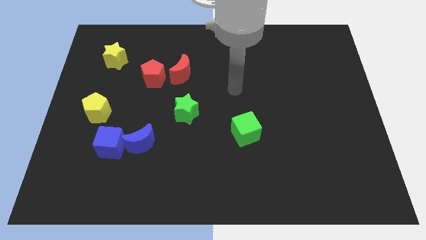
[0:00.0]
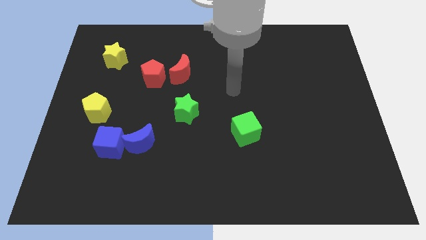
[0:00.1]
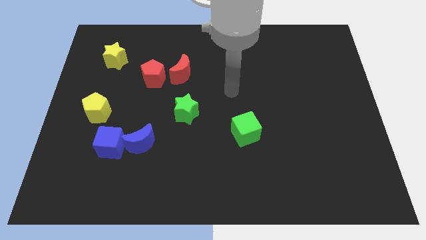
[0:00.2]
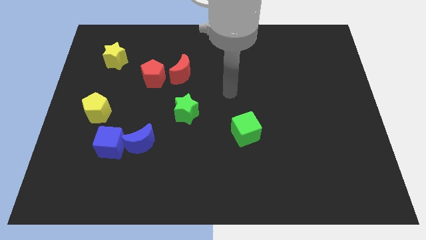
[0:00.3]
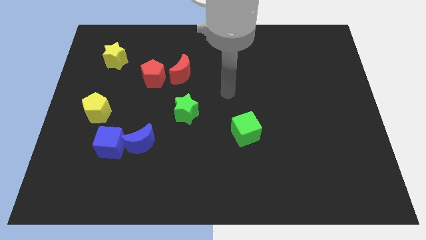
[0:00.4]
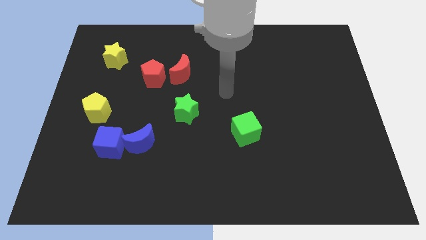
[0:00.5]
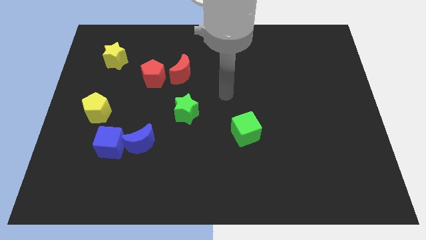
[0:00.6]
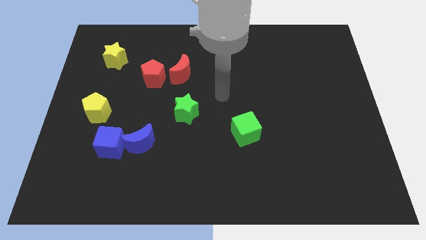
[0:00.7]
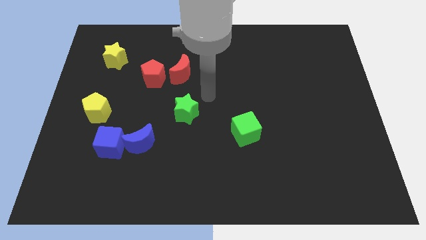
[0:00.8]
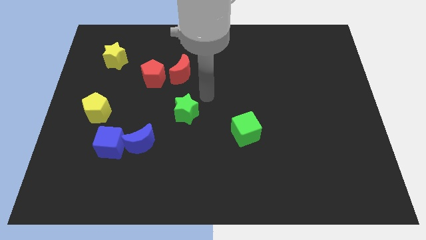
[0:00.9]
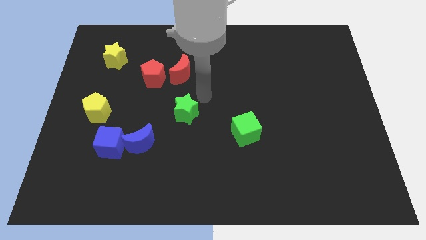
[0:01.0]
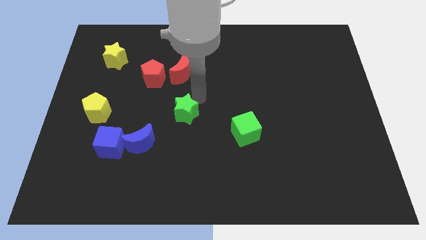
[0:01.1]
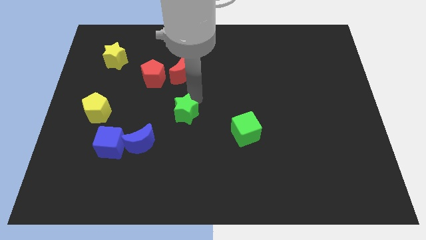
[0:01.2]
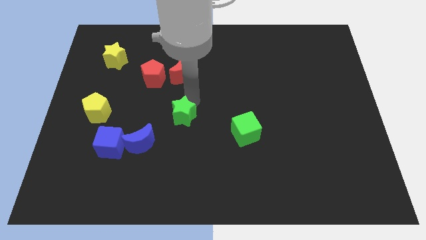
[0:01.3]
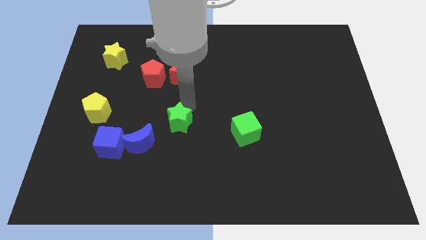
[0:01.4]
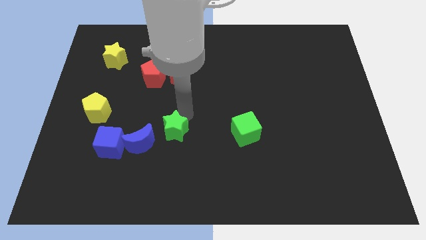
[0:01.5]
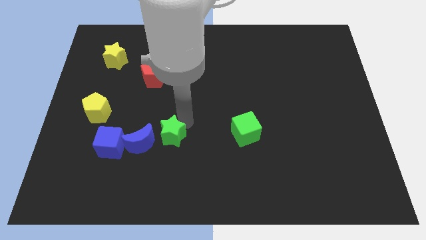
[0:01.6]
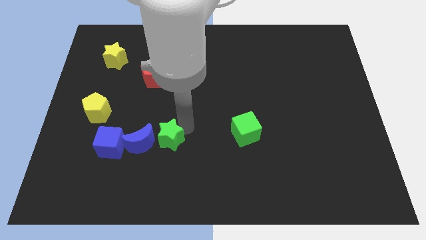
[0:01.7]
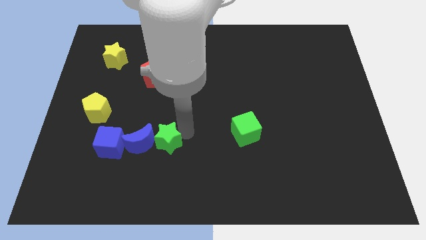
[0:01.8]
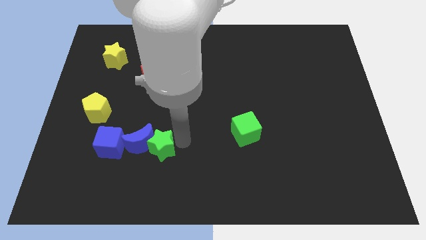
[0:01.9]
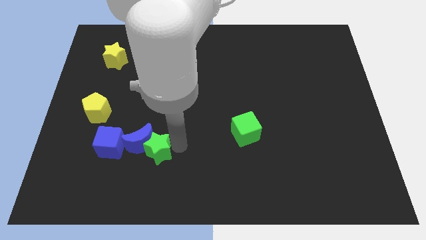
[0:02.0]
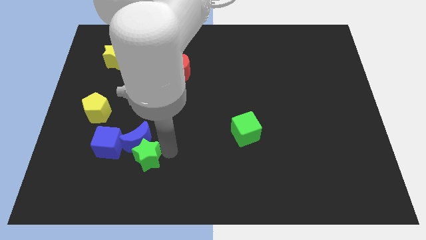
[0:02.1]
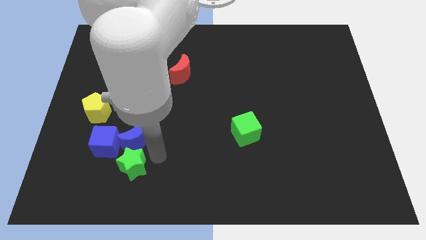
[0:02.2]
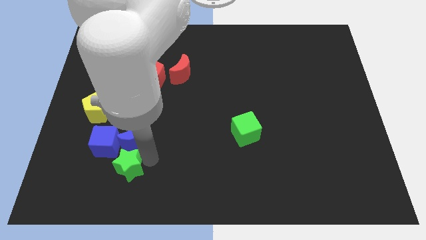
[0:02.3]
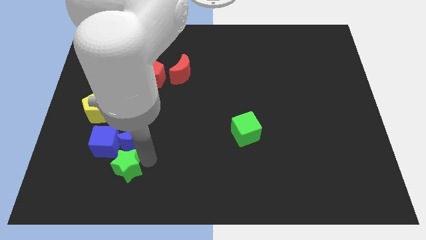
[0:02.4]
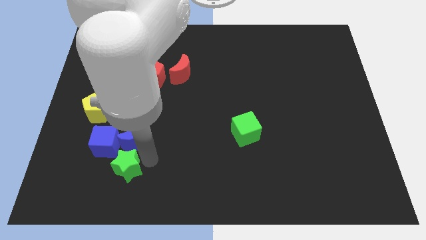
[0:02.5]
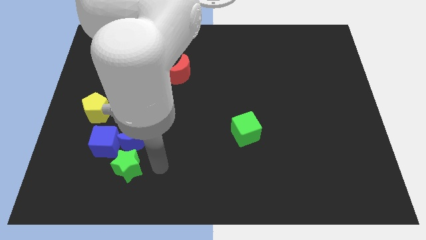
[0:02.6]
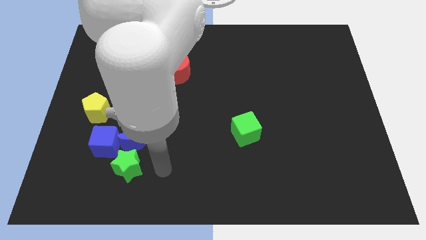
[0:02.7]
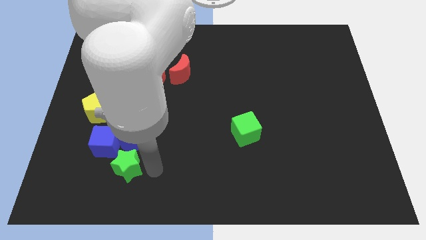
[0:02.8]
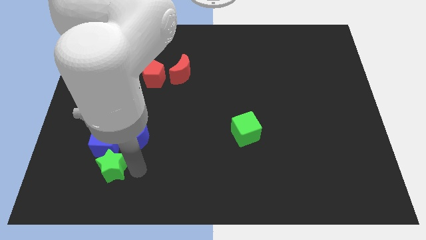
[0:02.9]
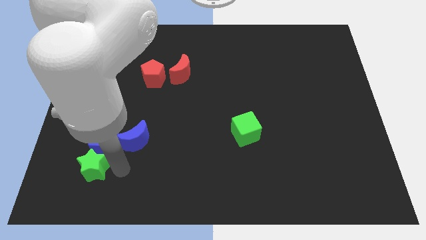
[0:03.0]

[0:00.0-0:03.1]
push green star below blue cube

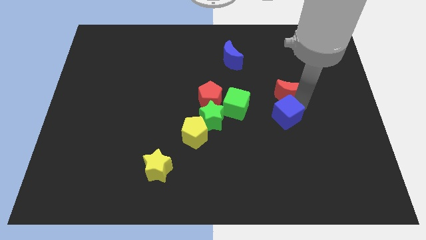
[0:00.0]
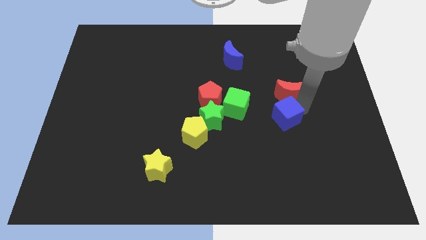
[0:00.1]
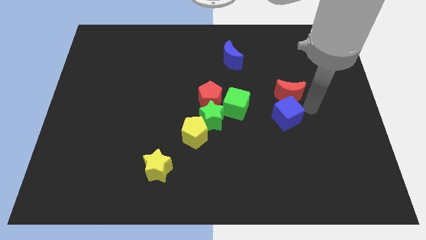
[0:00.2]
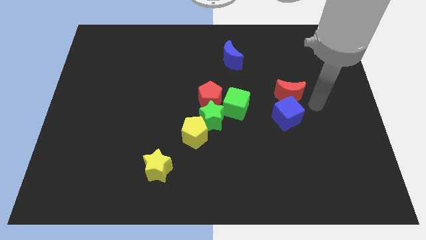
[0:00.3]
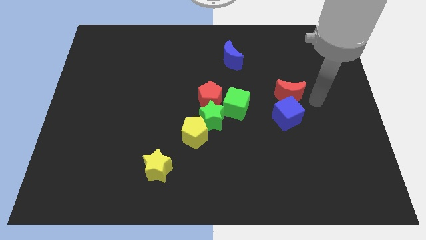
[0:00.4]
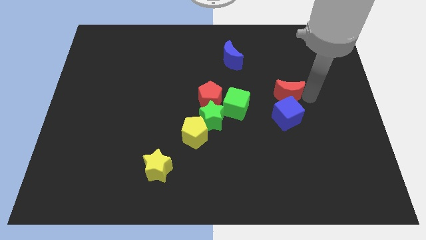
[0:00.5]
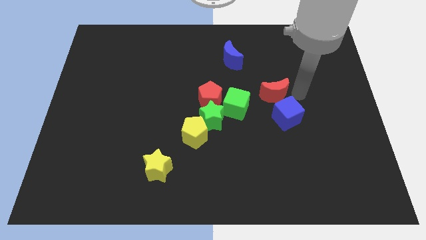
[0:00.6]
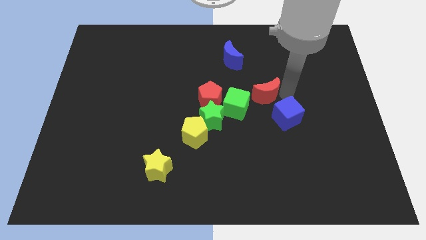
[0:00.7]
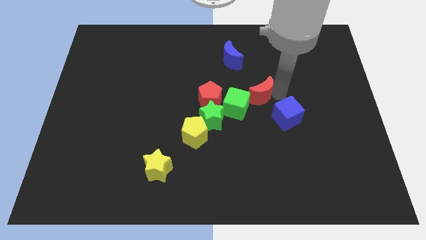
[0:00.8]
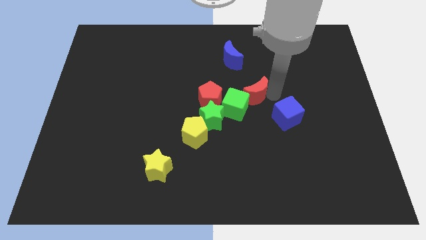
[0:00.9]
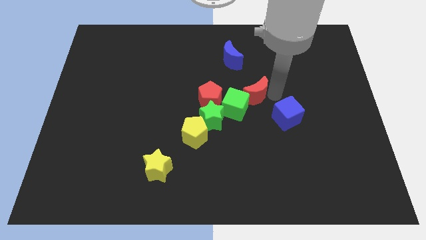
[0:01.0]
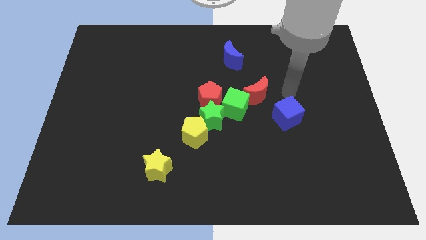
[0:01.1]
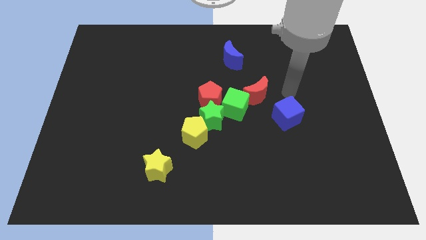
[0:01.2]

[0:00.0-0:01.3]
separate red crescent from blue cube

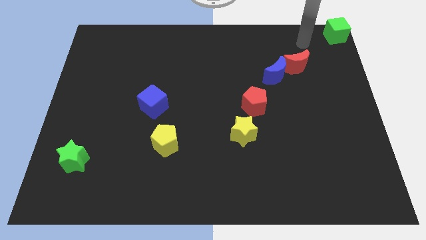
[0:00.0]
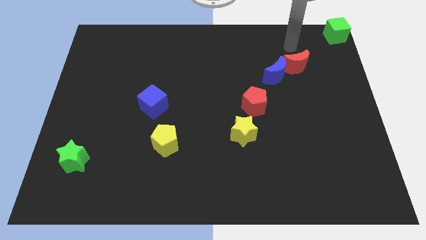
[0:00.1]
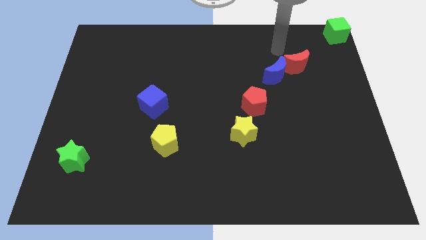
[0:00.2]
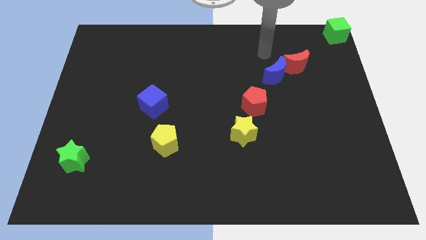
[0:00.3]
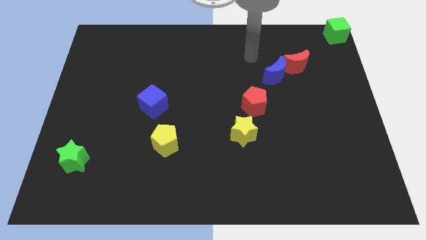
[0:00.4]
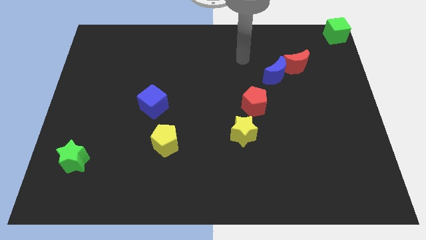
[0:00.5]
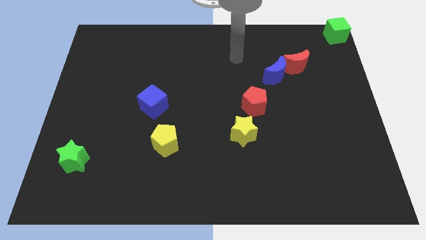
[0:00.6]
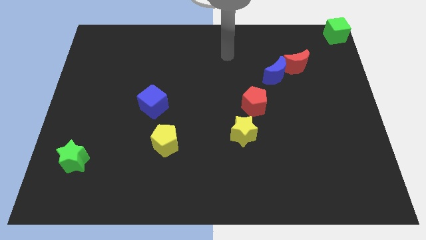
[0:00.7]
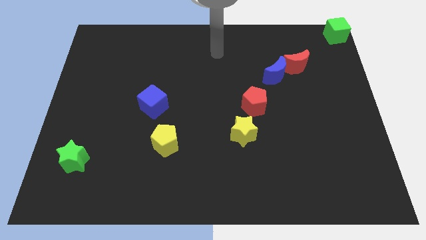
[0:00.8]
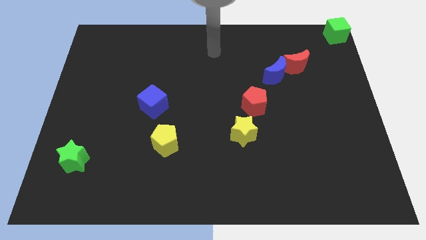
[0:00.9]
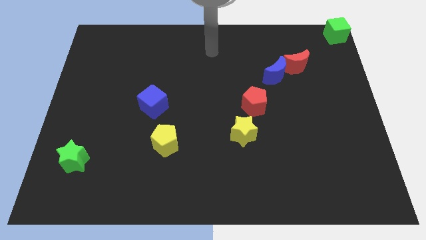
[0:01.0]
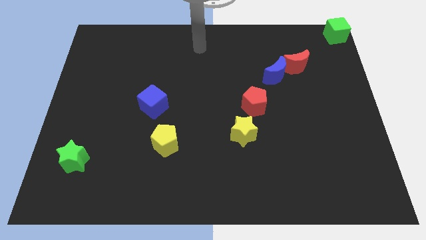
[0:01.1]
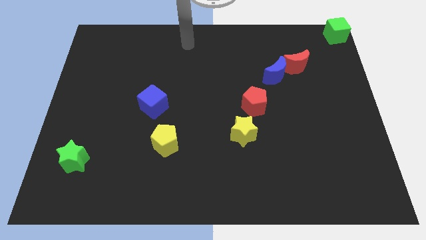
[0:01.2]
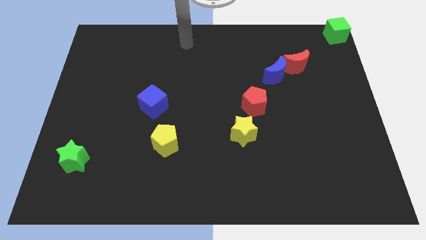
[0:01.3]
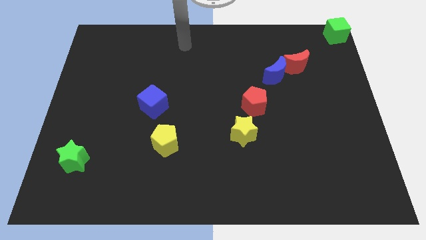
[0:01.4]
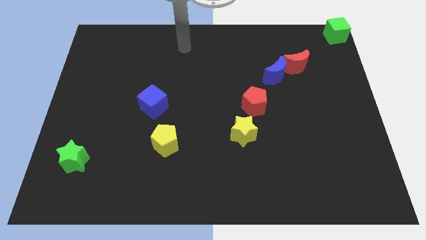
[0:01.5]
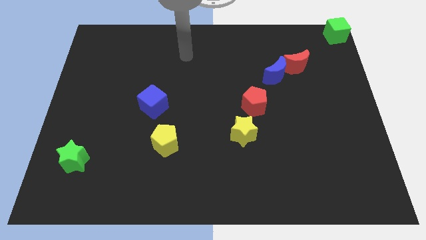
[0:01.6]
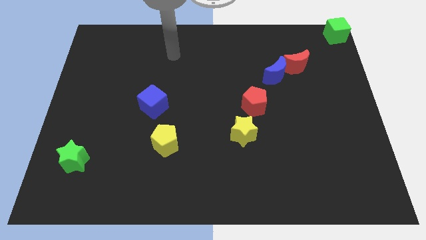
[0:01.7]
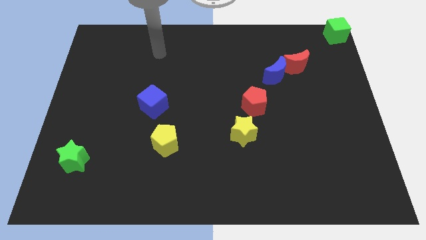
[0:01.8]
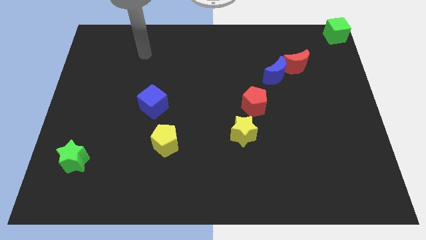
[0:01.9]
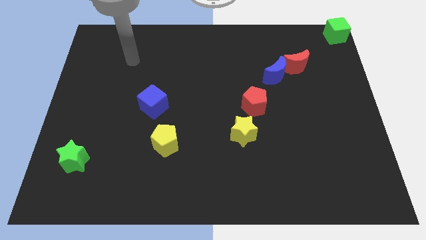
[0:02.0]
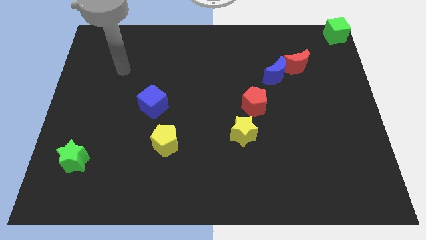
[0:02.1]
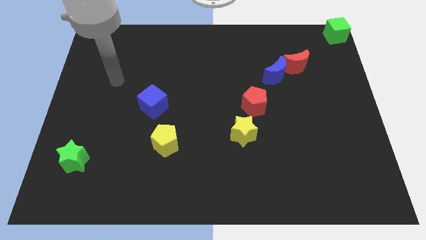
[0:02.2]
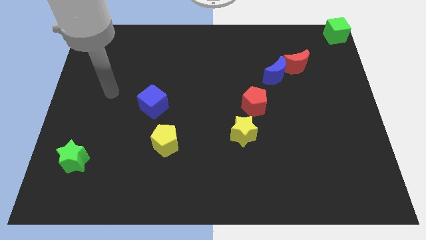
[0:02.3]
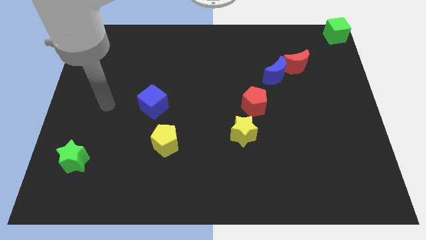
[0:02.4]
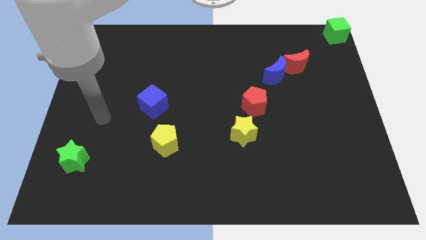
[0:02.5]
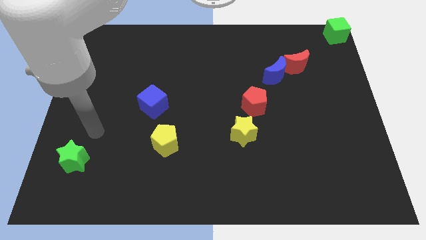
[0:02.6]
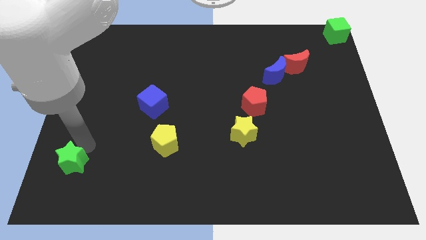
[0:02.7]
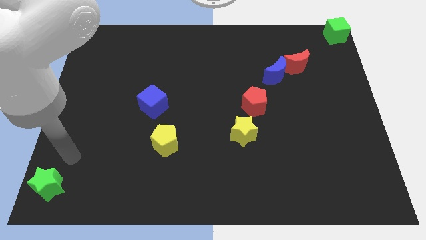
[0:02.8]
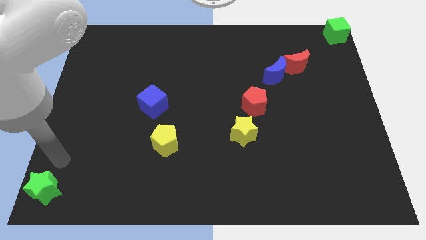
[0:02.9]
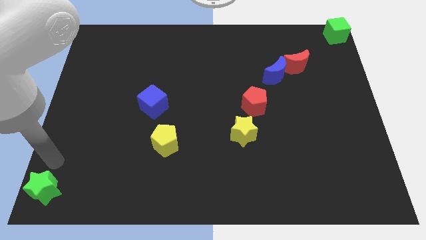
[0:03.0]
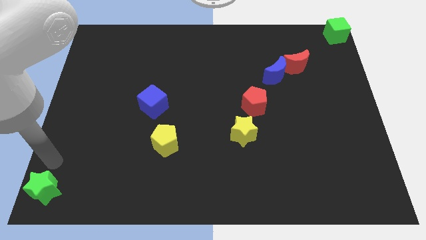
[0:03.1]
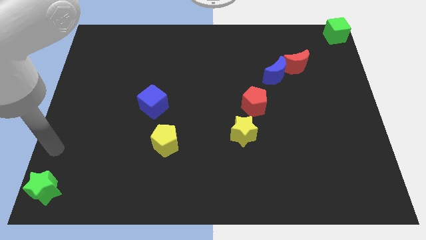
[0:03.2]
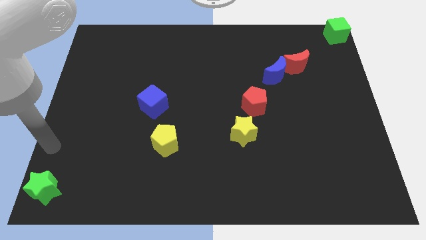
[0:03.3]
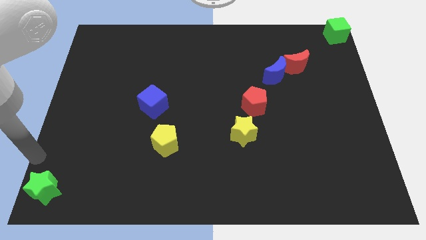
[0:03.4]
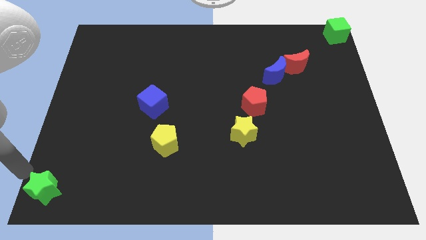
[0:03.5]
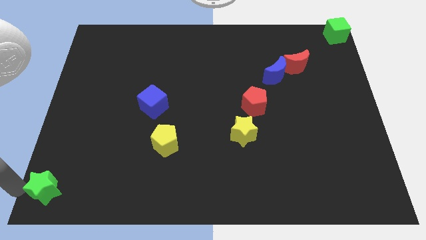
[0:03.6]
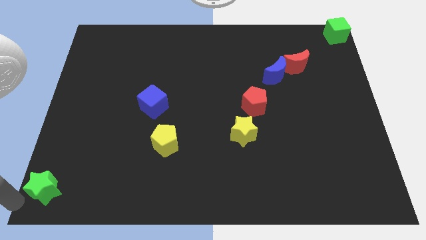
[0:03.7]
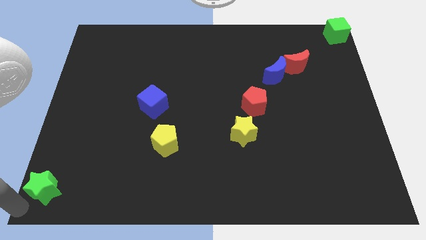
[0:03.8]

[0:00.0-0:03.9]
move the green star to the bottom left corner of the board

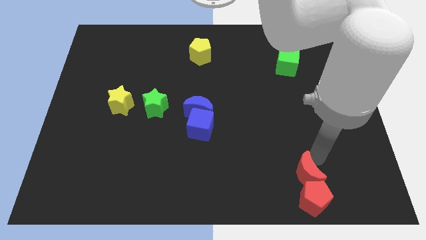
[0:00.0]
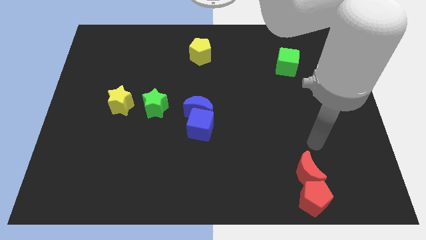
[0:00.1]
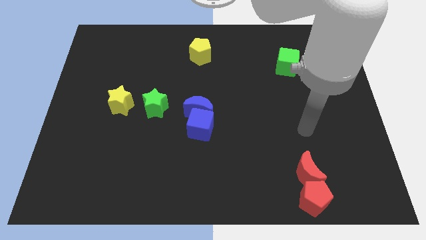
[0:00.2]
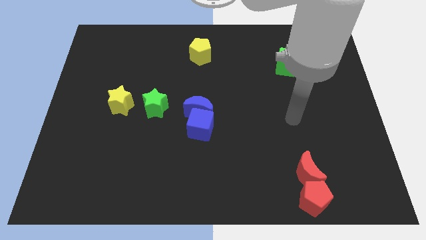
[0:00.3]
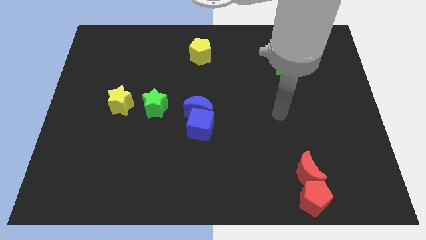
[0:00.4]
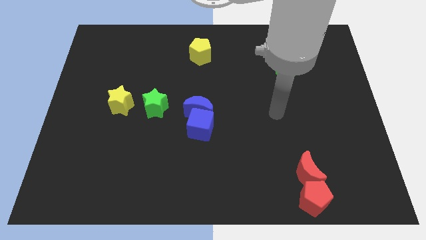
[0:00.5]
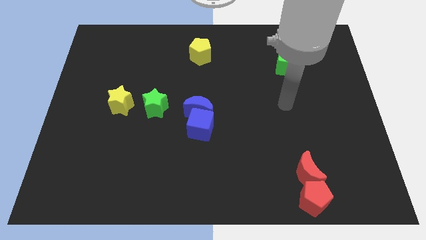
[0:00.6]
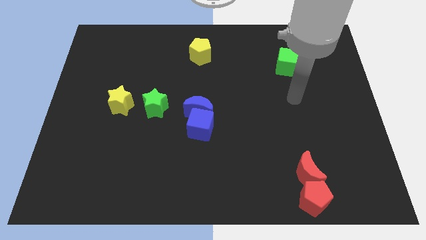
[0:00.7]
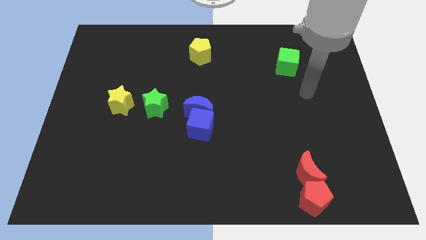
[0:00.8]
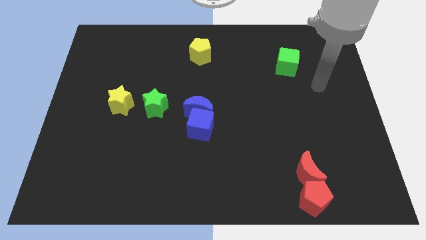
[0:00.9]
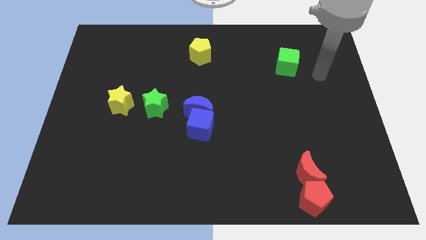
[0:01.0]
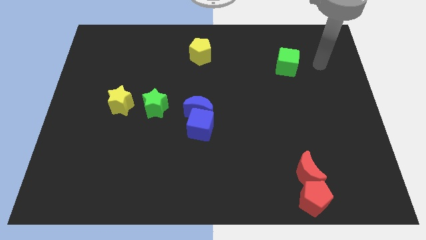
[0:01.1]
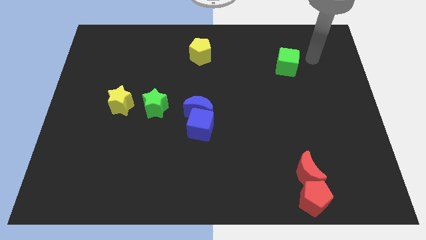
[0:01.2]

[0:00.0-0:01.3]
go to the right side of the green cube
